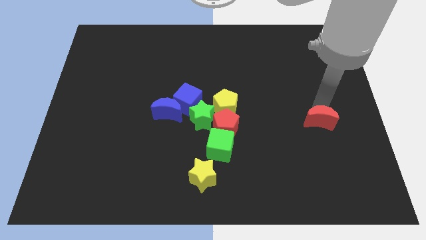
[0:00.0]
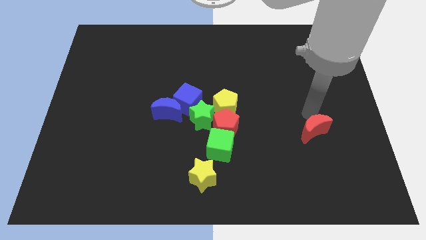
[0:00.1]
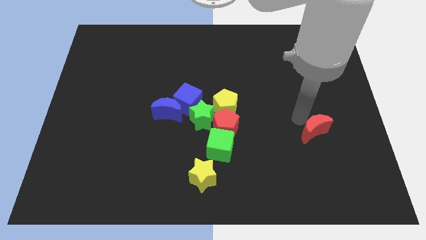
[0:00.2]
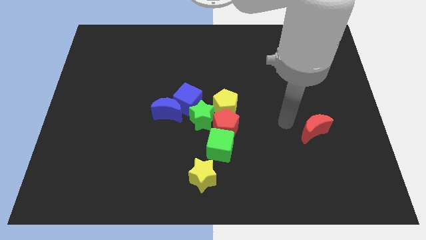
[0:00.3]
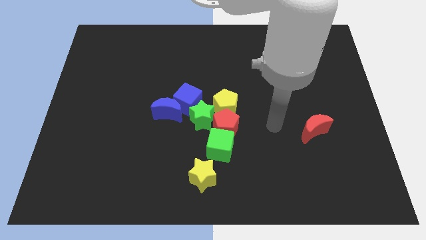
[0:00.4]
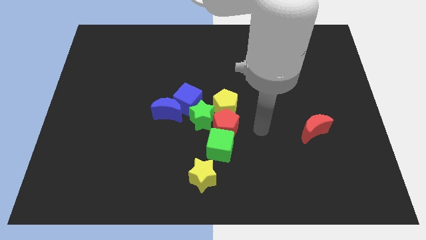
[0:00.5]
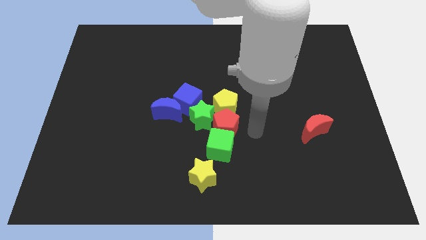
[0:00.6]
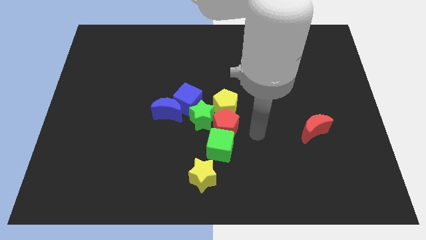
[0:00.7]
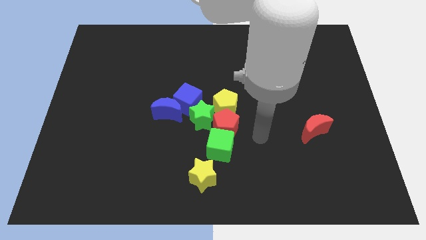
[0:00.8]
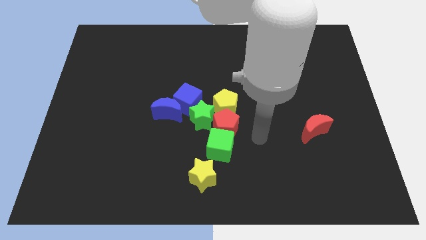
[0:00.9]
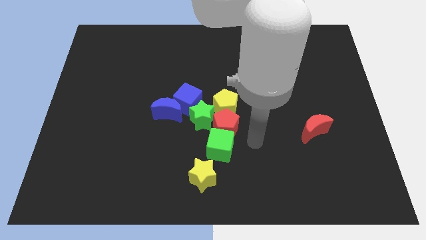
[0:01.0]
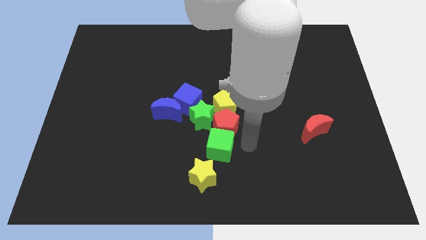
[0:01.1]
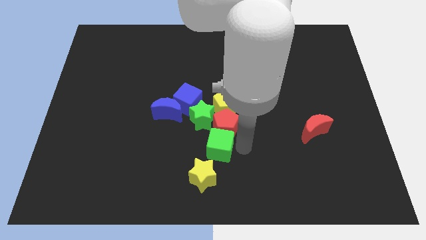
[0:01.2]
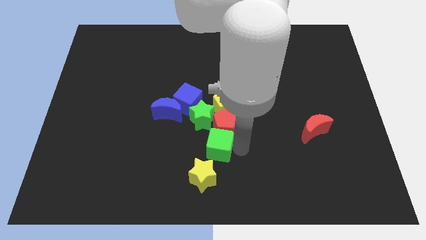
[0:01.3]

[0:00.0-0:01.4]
move your arm to the right of the green block

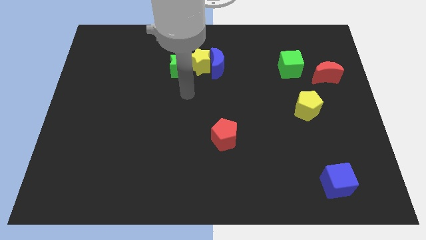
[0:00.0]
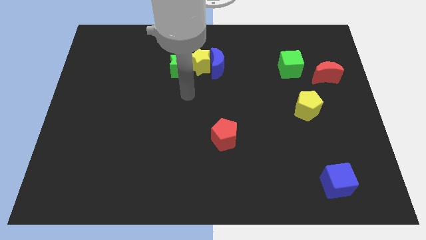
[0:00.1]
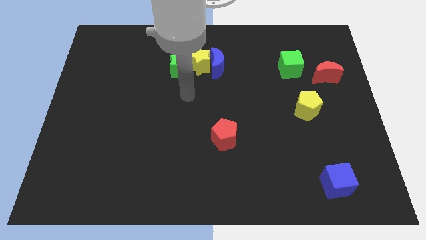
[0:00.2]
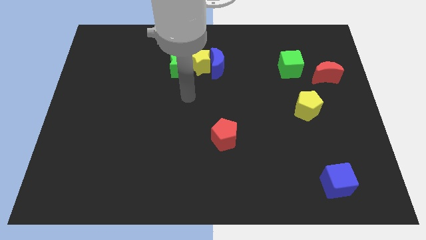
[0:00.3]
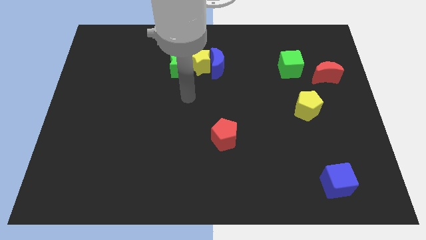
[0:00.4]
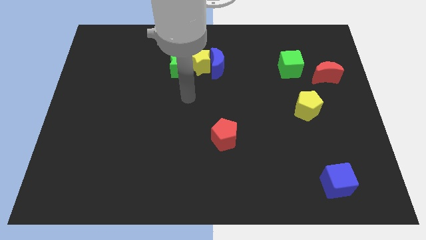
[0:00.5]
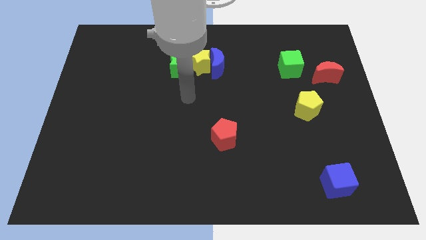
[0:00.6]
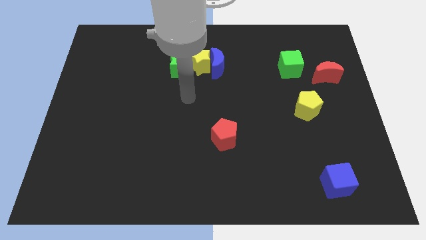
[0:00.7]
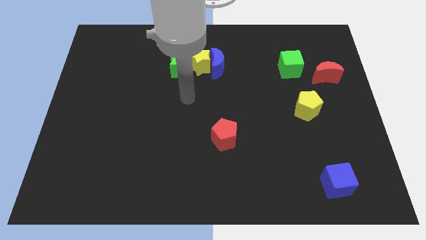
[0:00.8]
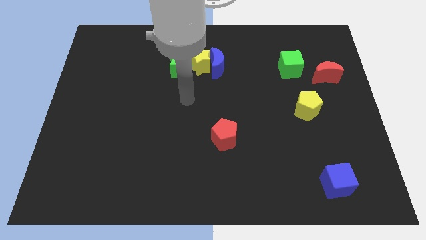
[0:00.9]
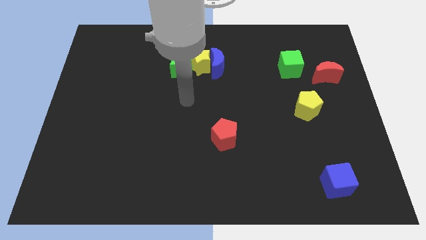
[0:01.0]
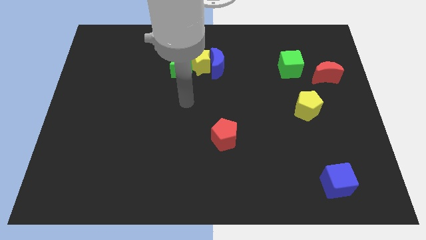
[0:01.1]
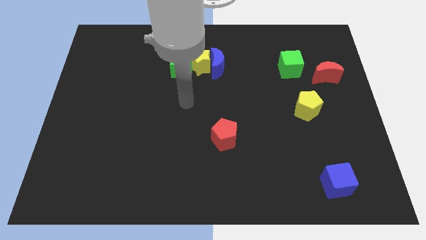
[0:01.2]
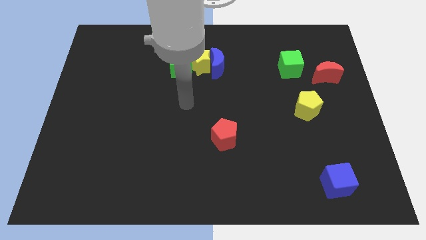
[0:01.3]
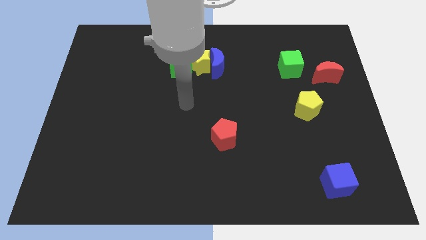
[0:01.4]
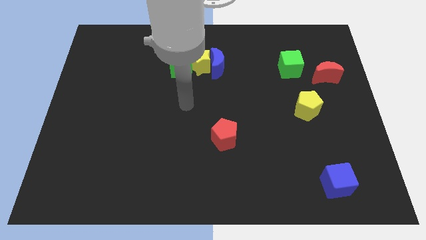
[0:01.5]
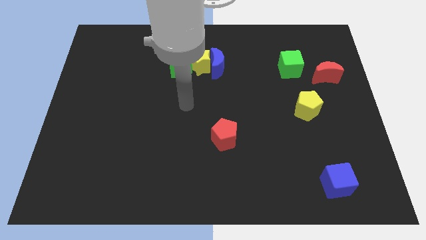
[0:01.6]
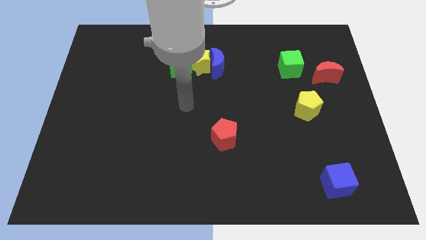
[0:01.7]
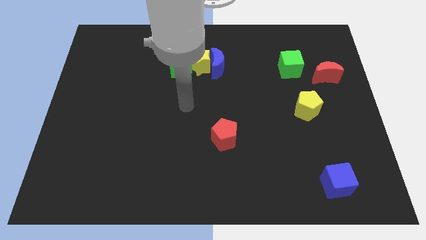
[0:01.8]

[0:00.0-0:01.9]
move your arm slightly down

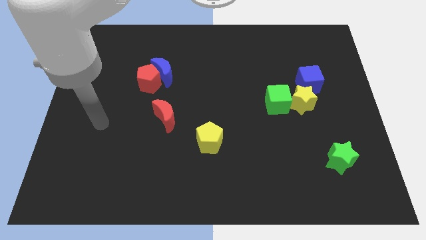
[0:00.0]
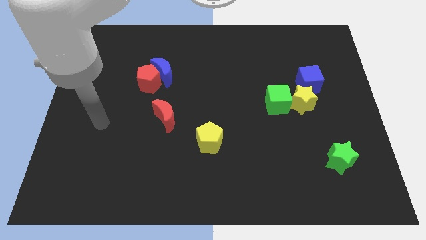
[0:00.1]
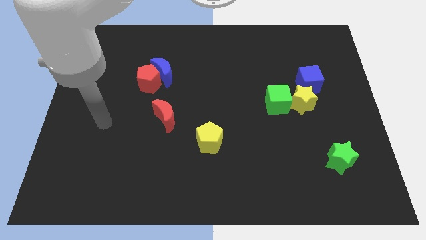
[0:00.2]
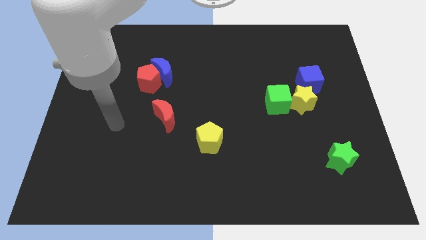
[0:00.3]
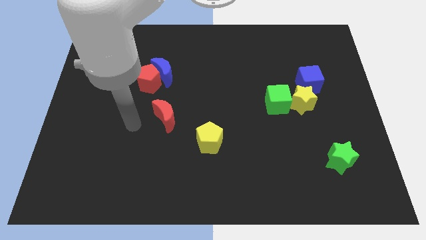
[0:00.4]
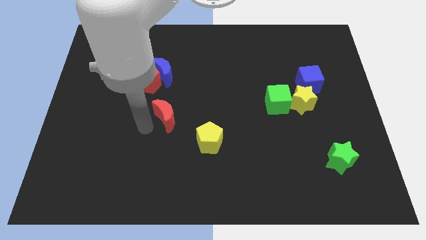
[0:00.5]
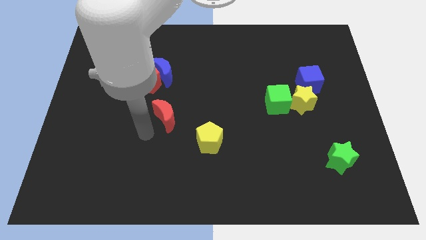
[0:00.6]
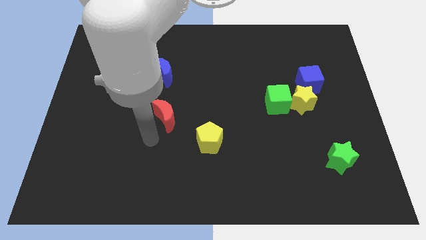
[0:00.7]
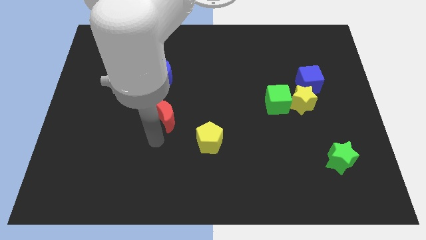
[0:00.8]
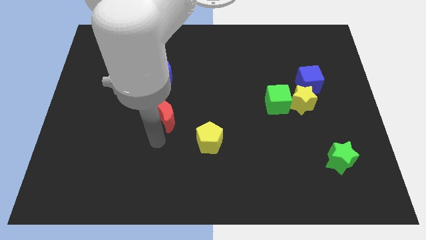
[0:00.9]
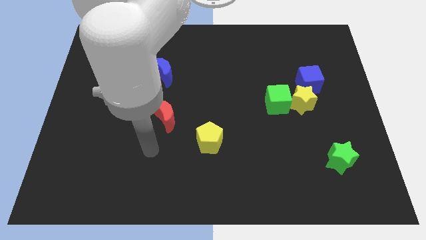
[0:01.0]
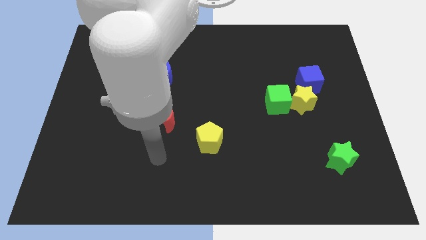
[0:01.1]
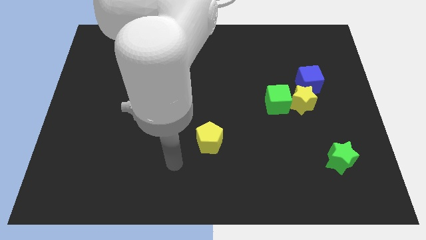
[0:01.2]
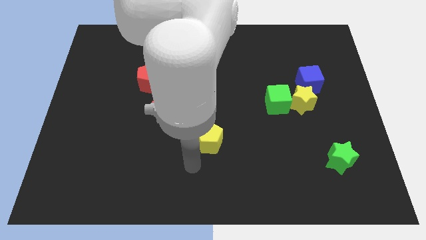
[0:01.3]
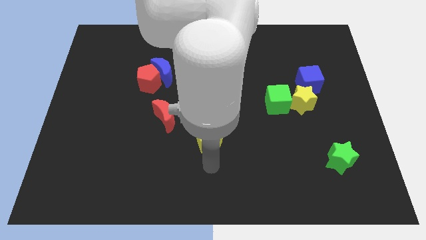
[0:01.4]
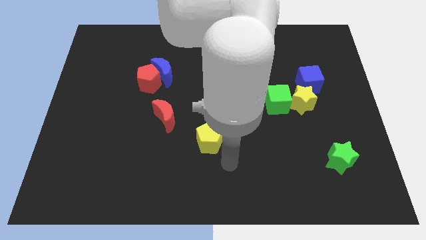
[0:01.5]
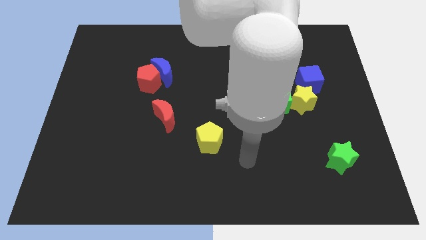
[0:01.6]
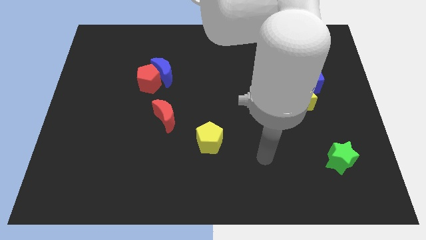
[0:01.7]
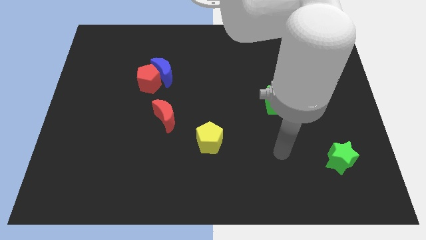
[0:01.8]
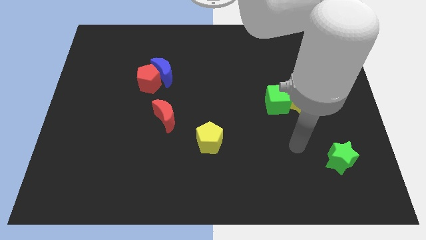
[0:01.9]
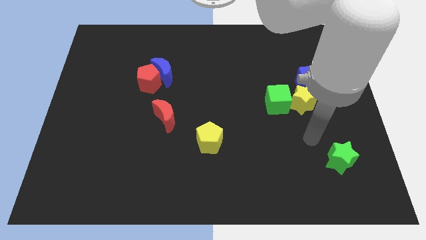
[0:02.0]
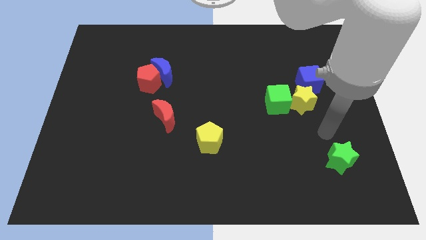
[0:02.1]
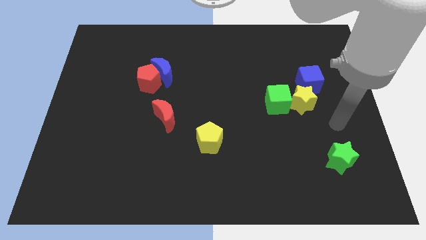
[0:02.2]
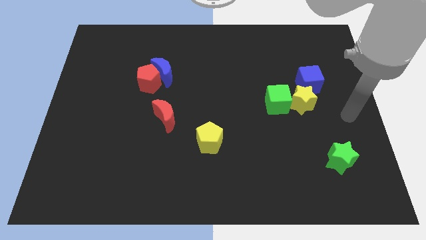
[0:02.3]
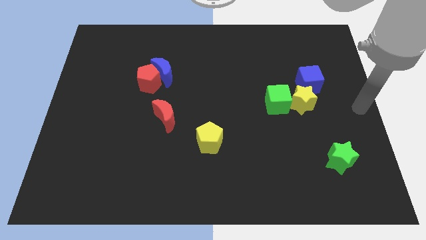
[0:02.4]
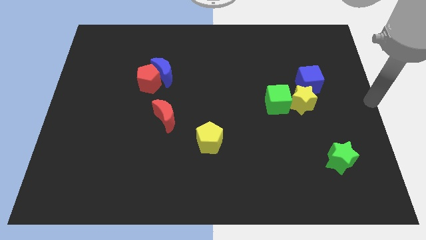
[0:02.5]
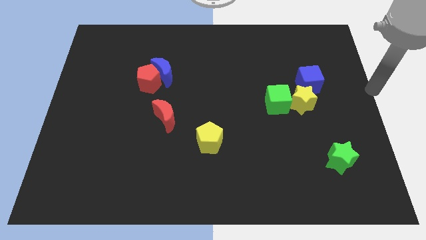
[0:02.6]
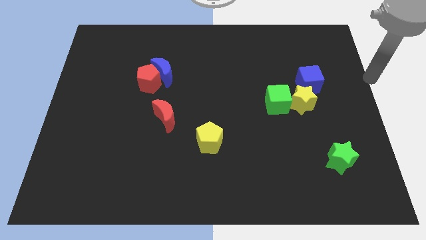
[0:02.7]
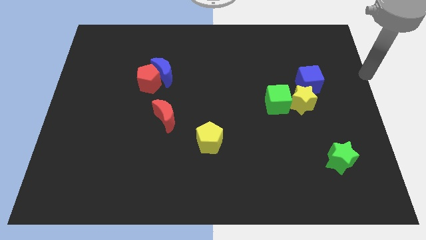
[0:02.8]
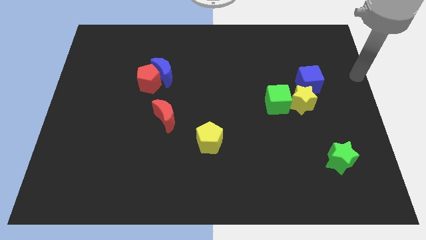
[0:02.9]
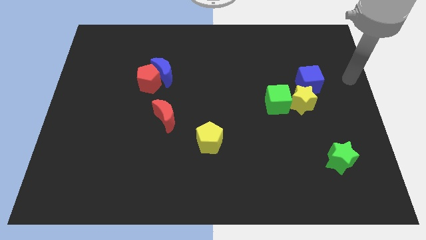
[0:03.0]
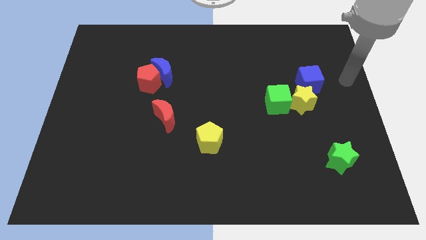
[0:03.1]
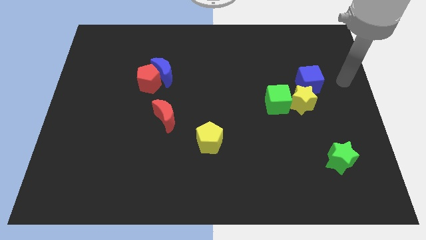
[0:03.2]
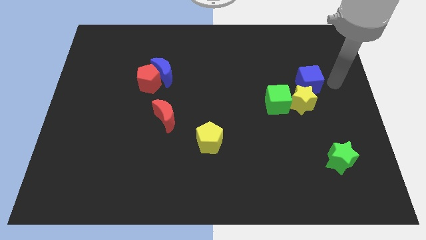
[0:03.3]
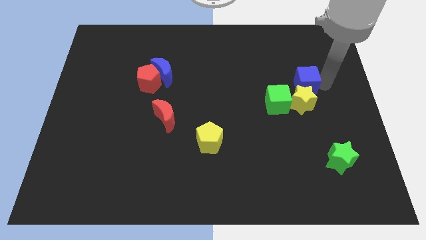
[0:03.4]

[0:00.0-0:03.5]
place your arm towards right side of blue cube

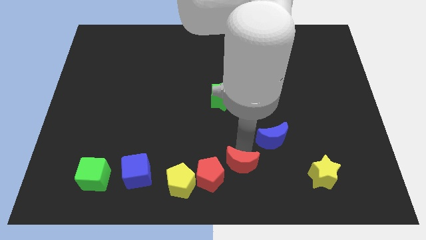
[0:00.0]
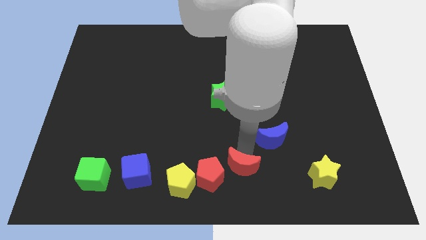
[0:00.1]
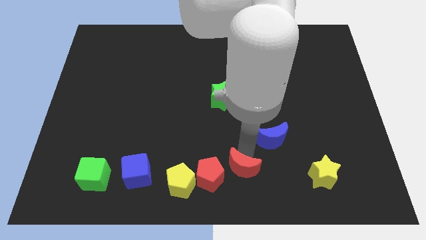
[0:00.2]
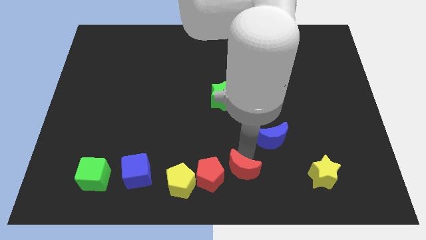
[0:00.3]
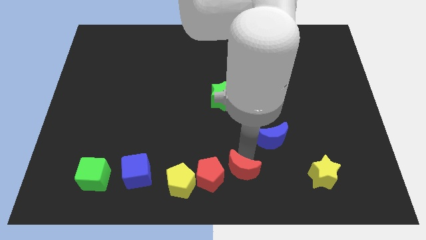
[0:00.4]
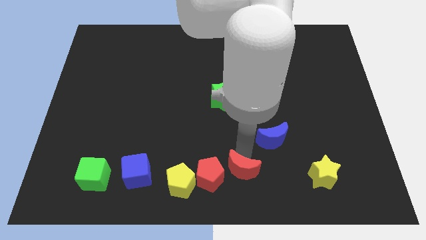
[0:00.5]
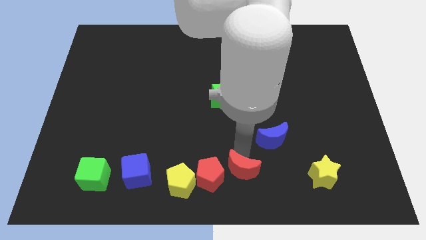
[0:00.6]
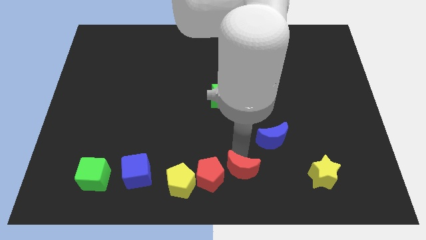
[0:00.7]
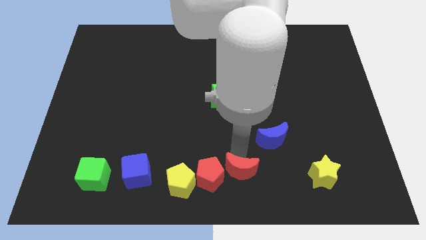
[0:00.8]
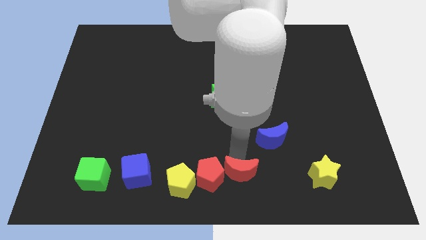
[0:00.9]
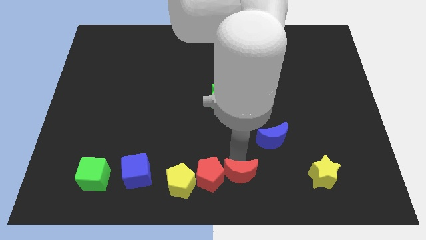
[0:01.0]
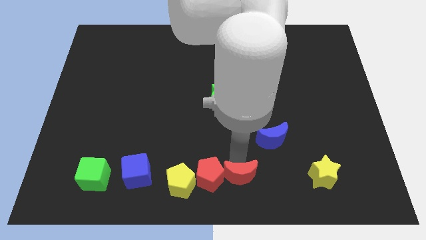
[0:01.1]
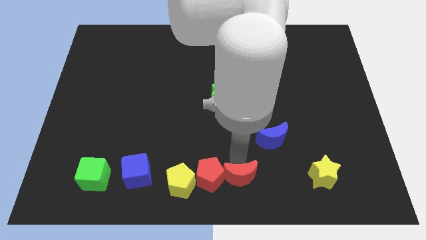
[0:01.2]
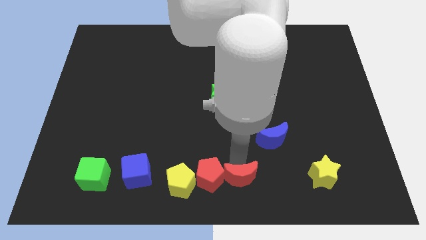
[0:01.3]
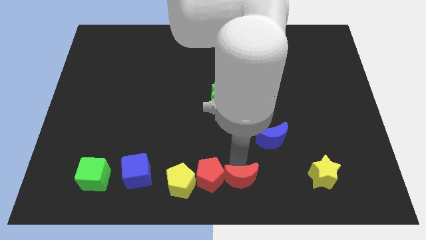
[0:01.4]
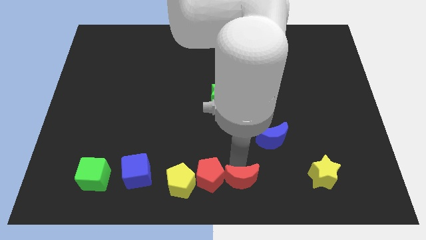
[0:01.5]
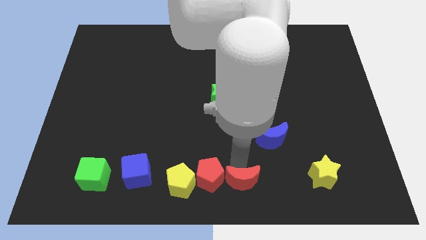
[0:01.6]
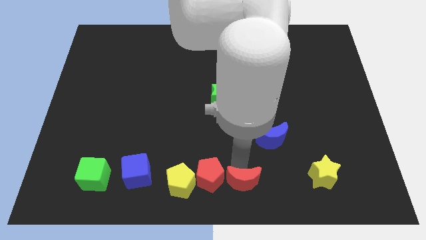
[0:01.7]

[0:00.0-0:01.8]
place the red crescent to the right side of the red pentagon

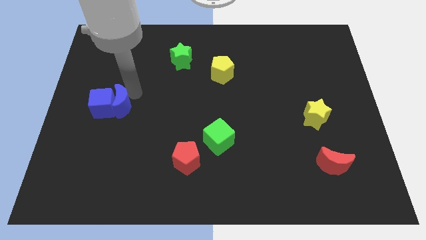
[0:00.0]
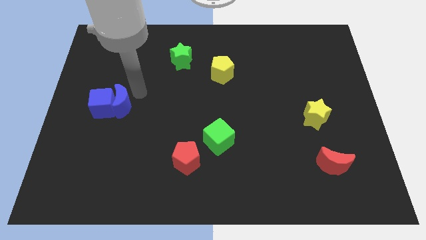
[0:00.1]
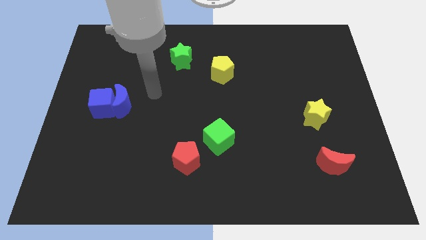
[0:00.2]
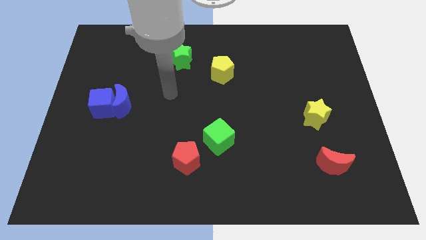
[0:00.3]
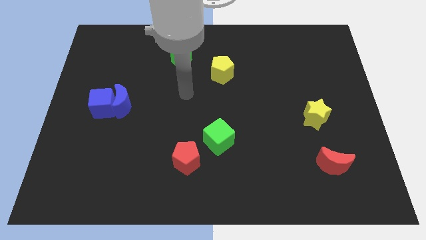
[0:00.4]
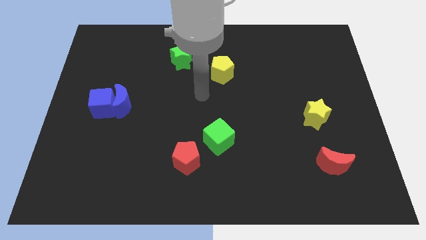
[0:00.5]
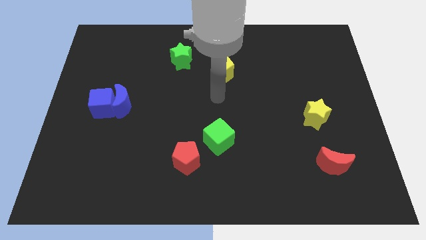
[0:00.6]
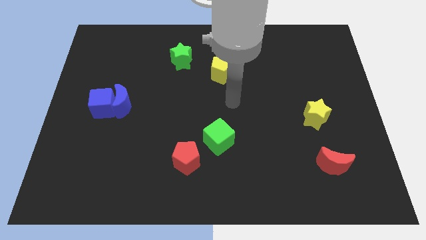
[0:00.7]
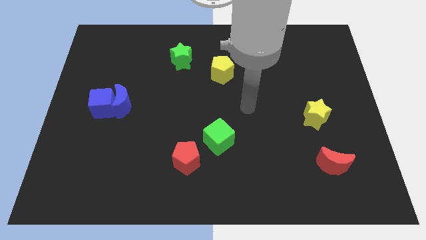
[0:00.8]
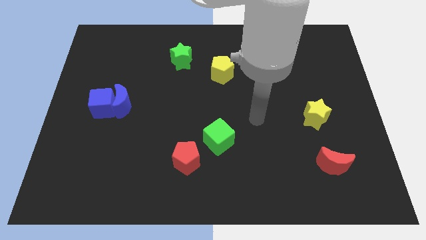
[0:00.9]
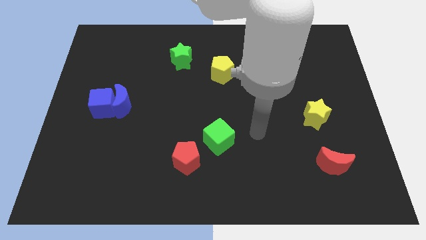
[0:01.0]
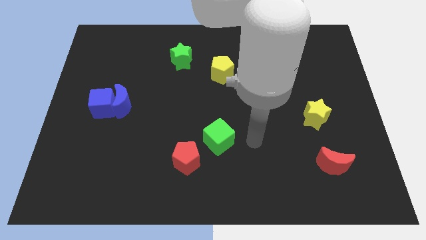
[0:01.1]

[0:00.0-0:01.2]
move your arm away from blue moon
